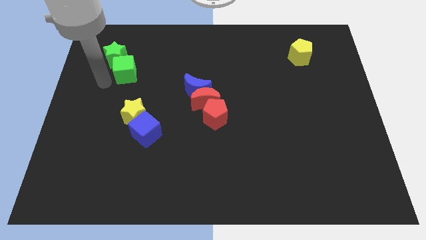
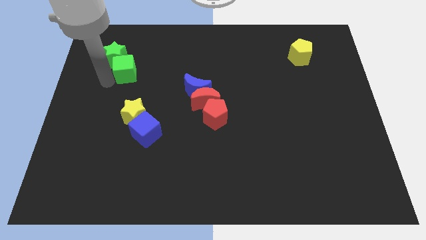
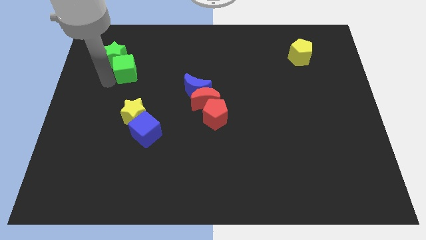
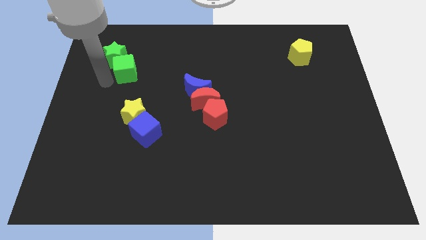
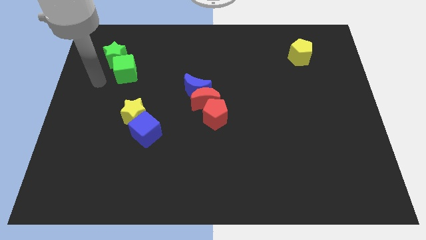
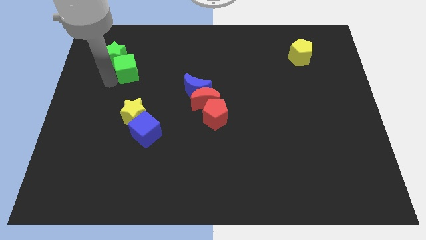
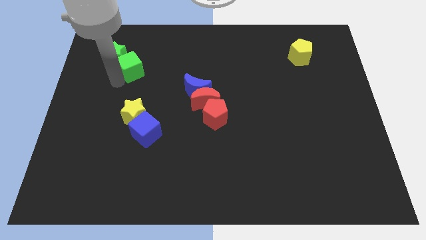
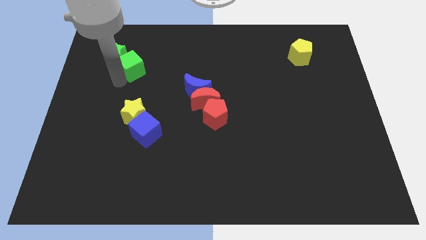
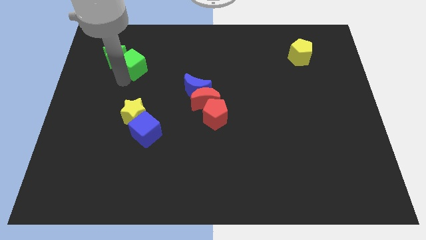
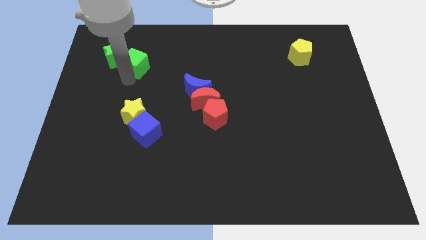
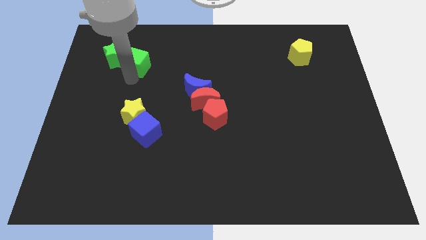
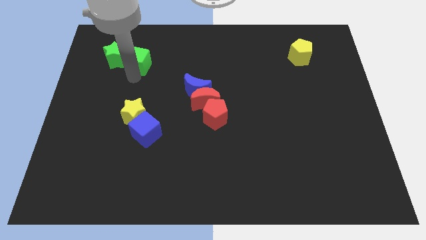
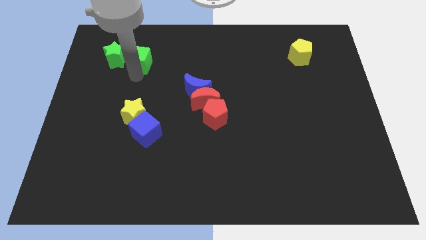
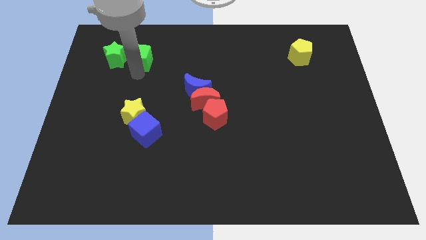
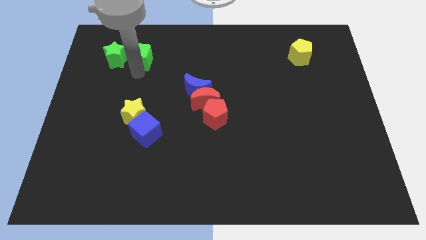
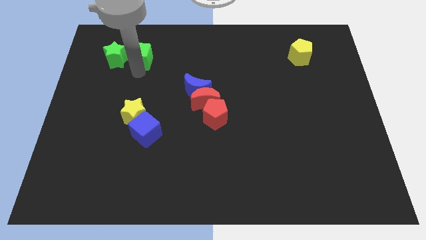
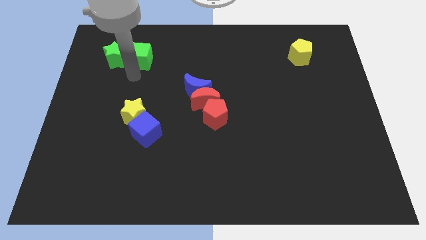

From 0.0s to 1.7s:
place the green cube parallel to green star

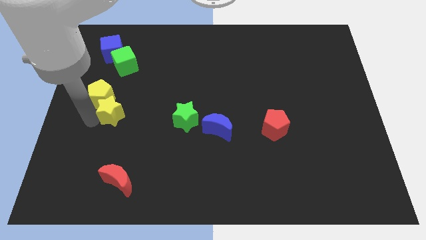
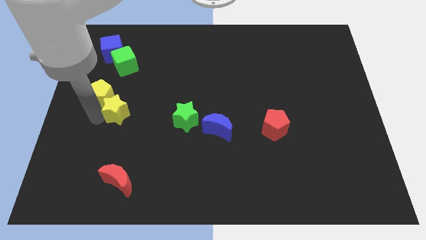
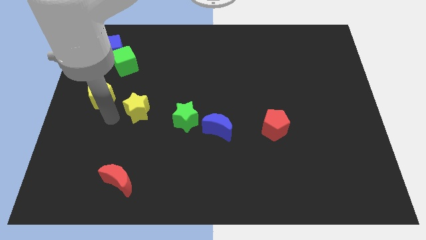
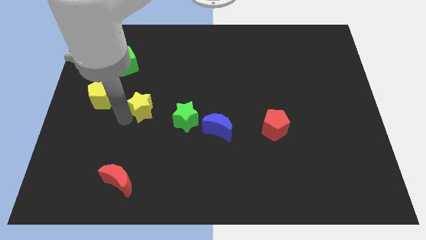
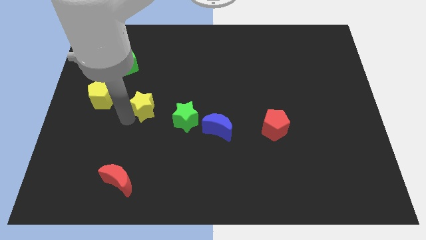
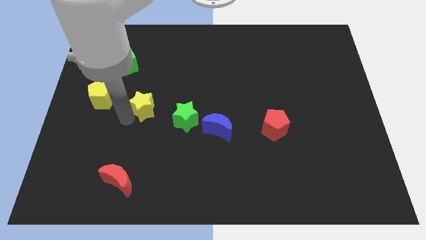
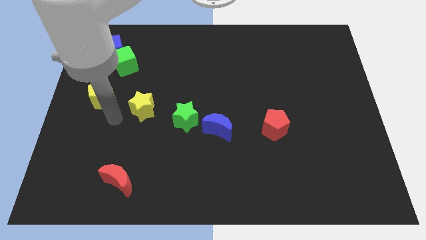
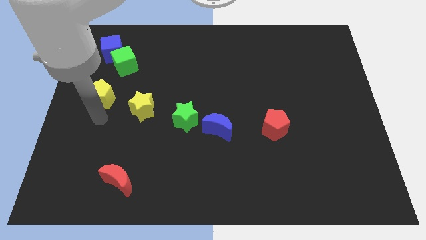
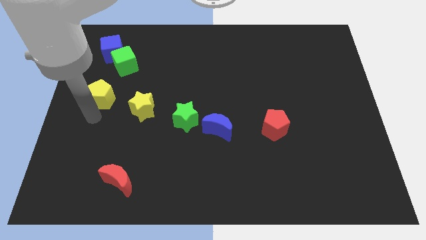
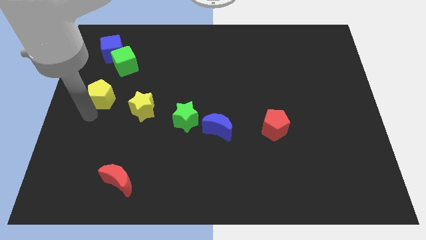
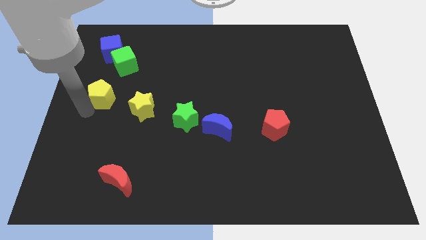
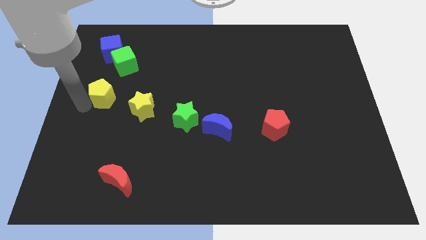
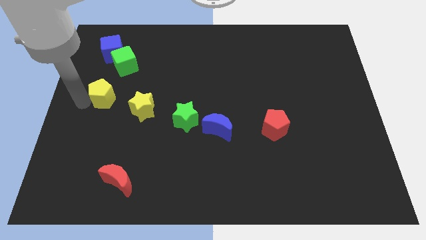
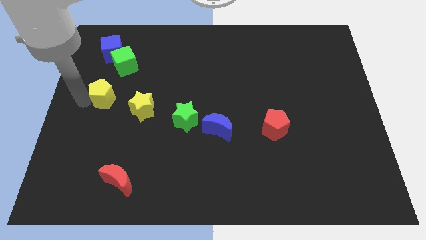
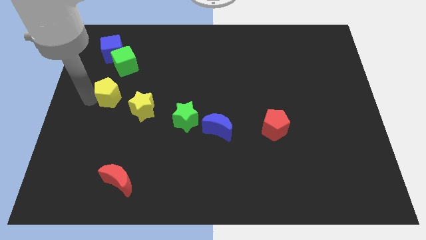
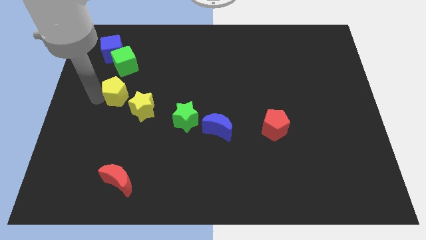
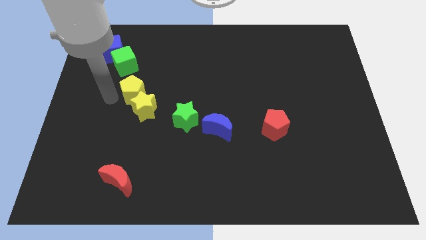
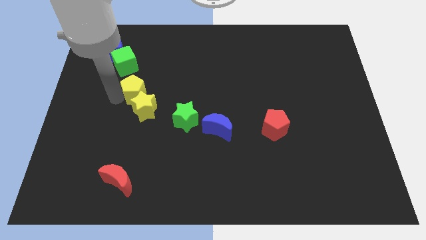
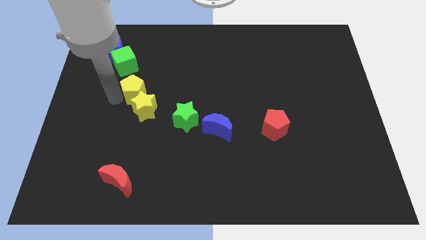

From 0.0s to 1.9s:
separate the yellow block and yellow pentagon

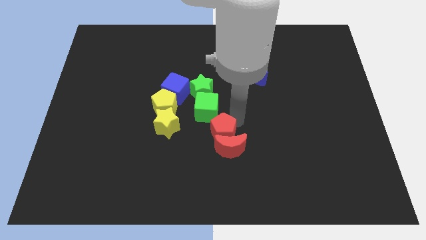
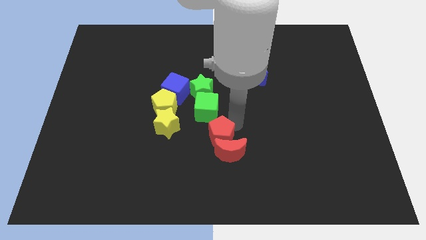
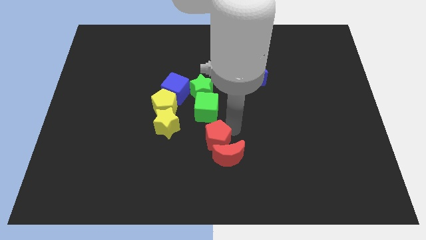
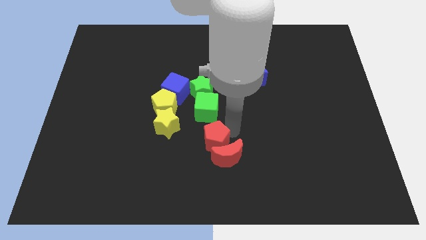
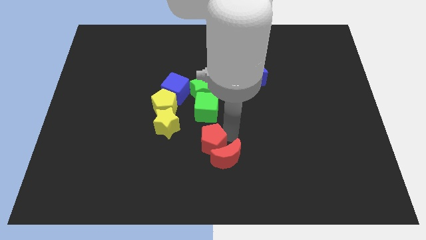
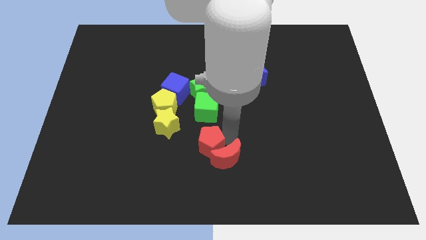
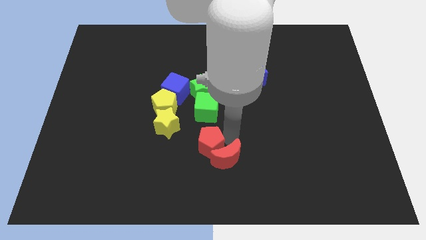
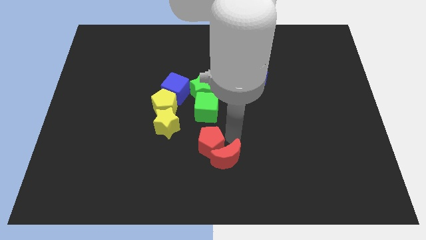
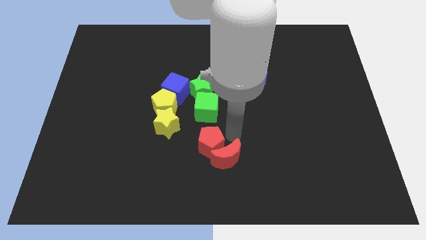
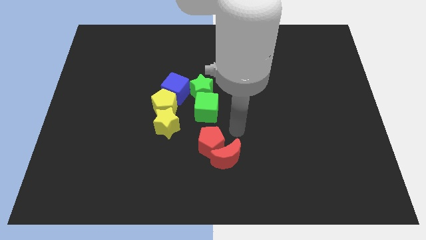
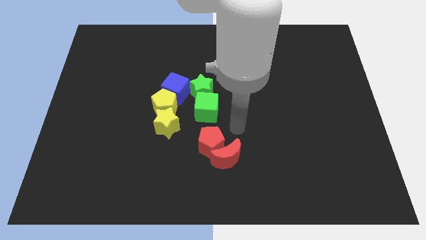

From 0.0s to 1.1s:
push red blocks below the green cube

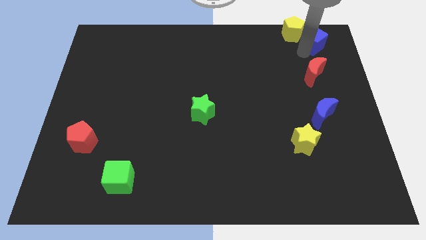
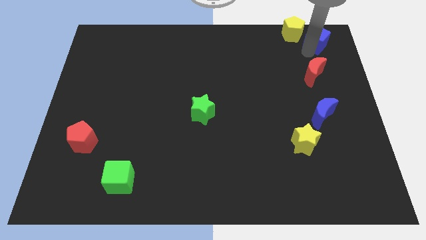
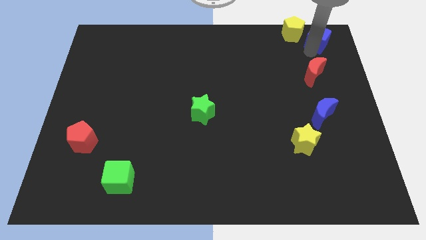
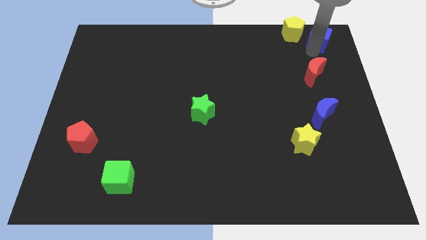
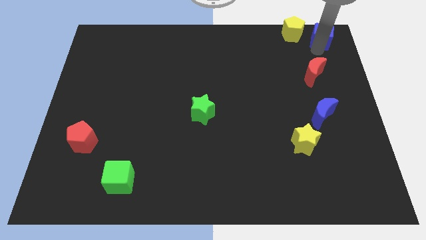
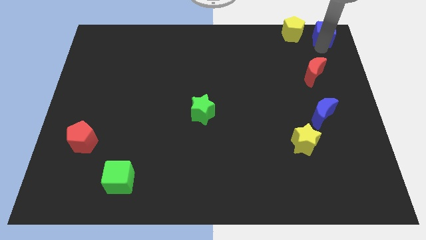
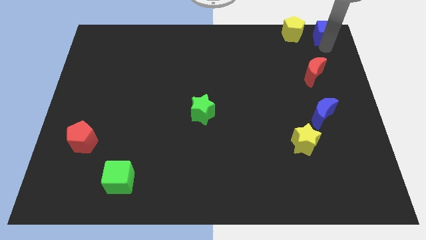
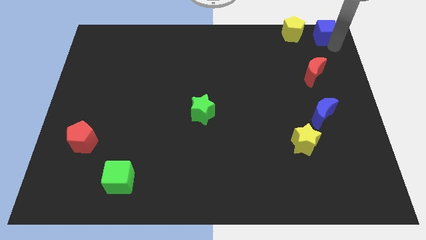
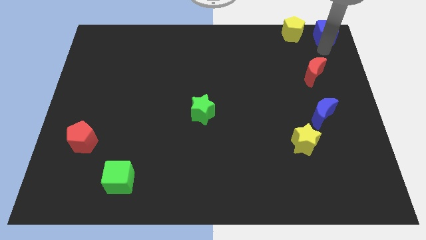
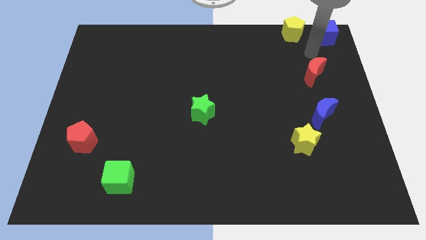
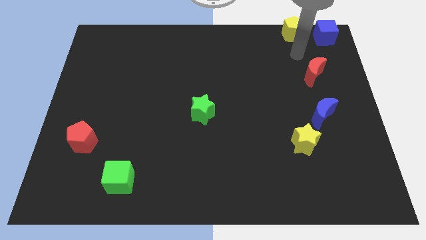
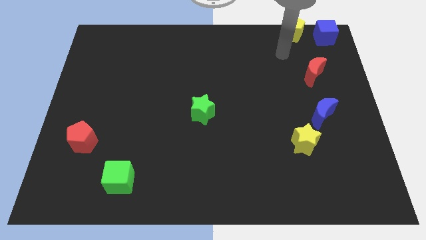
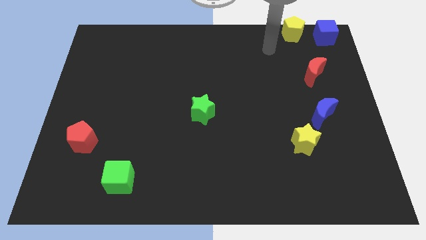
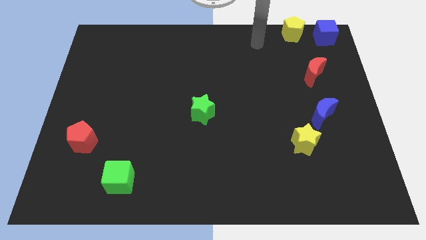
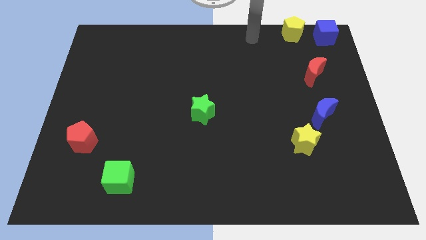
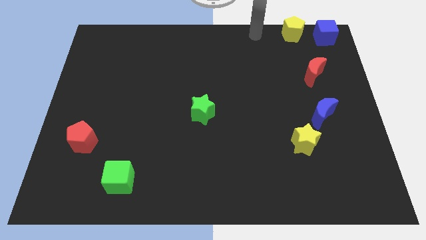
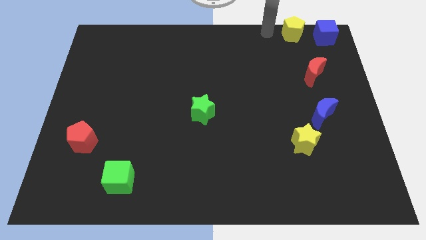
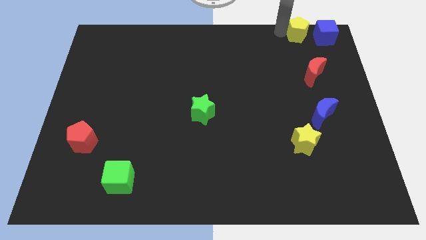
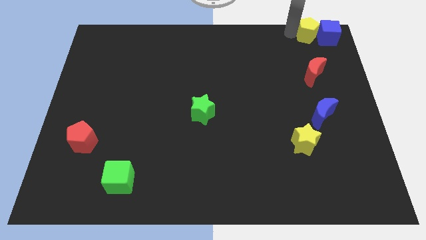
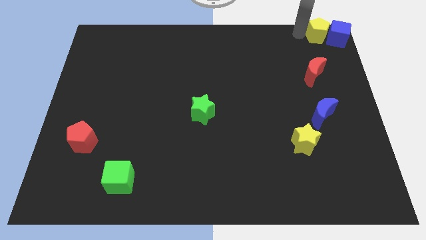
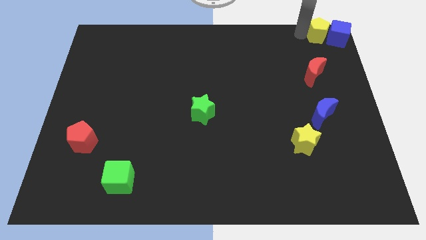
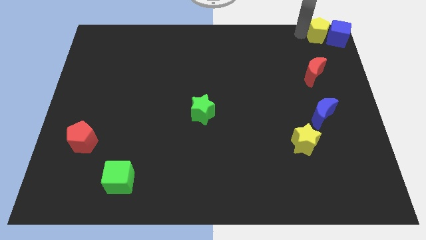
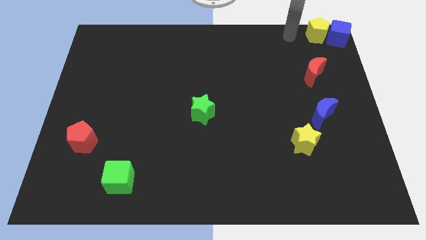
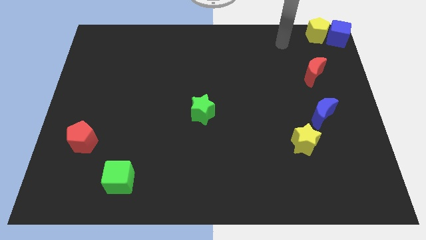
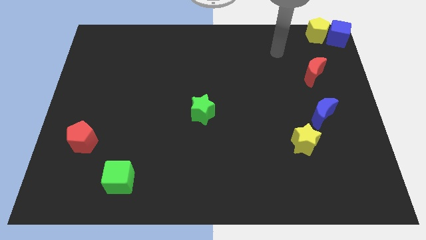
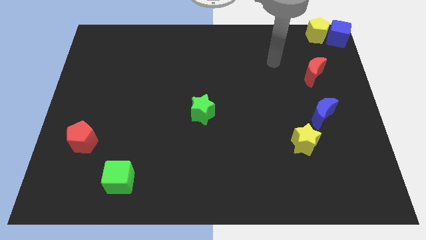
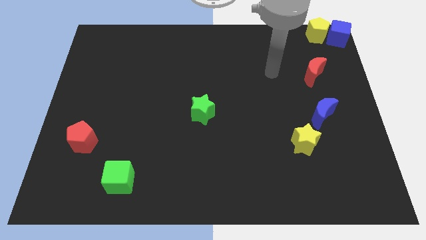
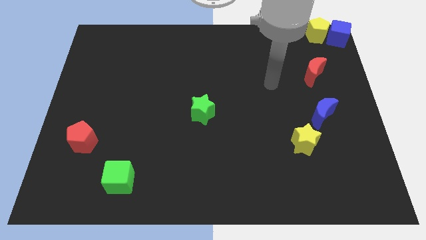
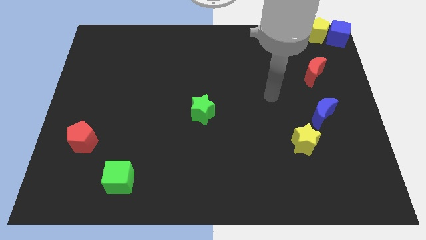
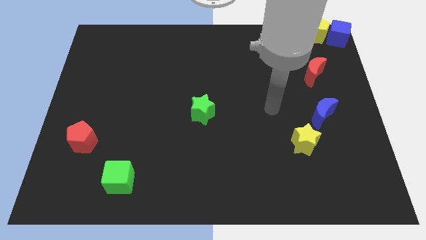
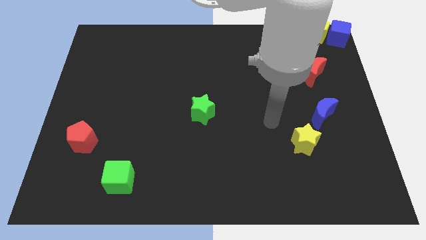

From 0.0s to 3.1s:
move yellow pentagon top right corner of the board

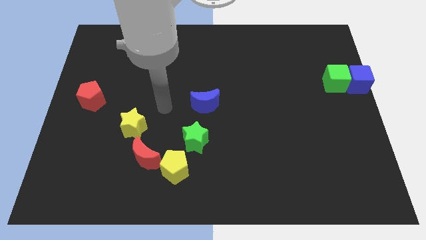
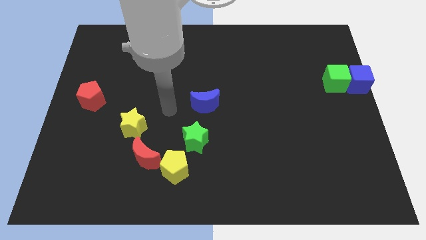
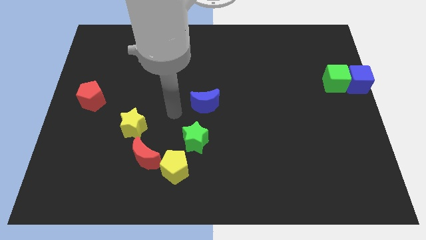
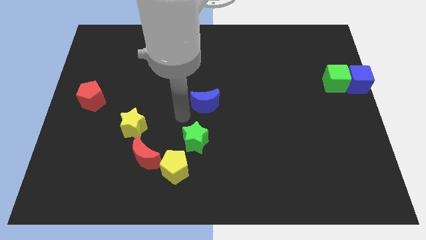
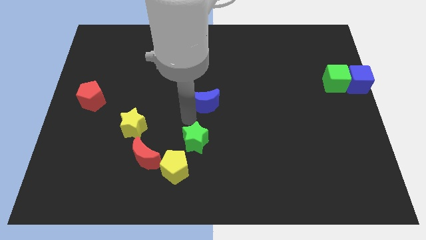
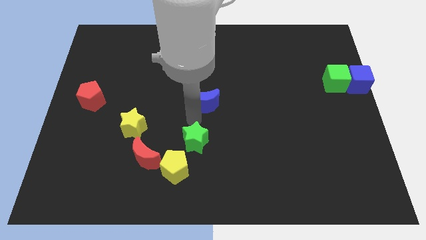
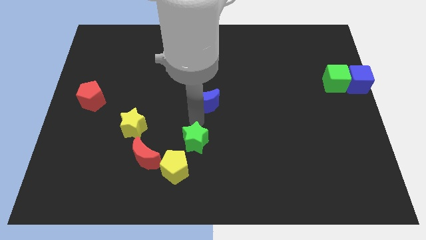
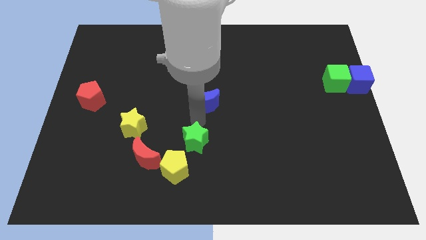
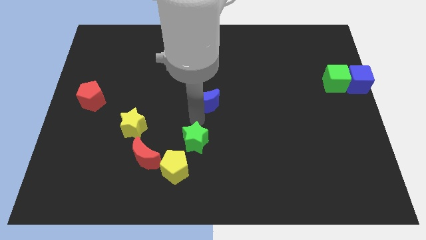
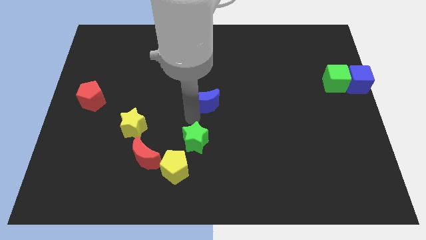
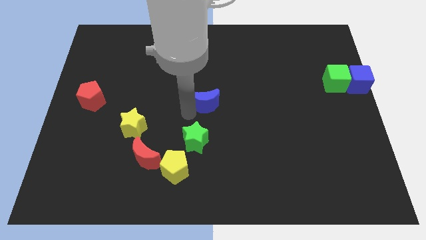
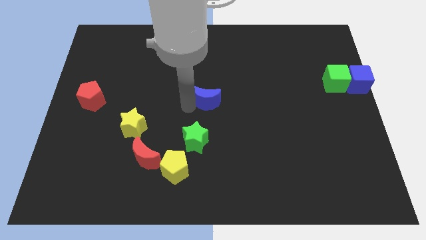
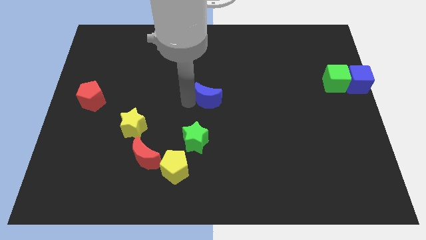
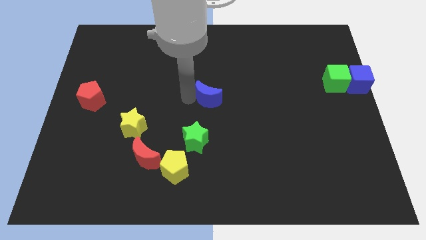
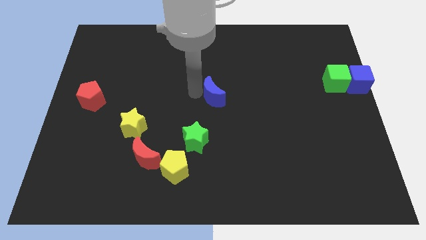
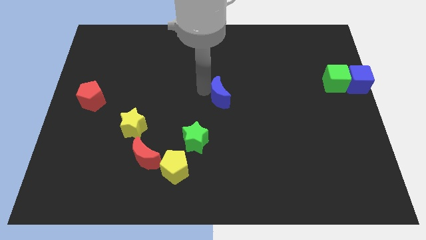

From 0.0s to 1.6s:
push the blue crescent slightly to the top
